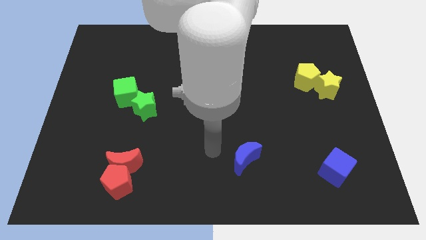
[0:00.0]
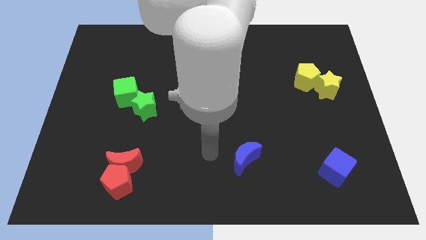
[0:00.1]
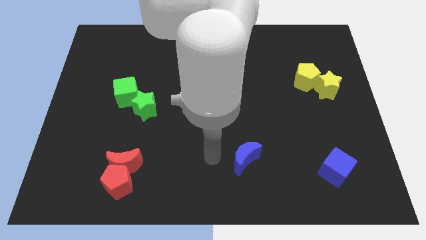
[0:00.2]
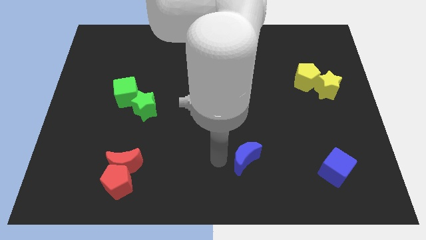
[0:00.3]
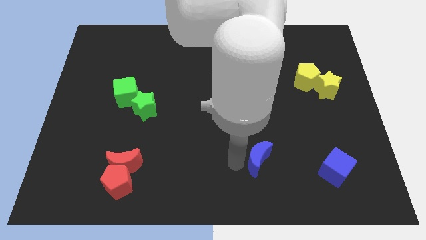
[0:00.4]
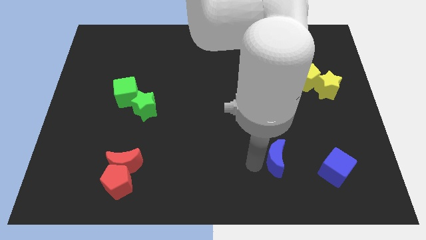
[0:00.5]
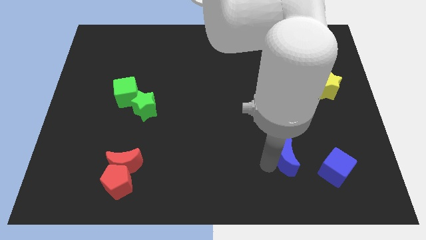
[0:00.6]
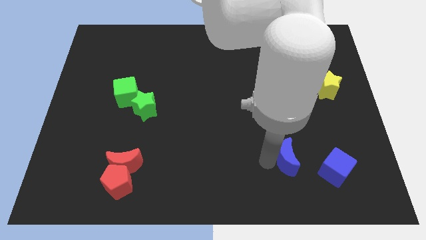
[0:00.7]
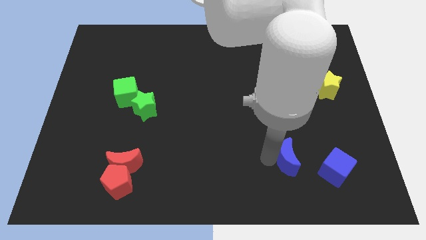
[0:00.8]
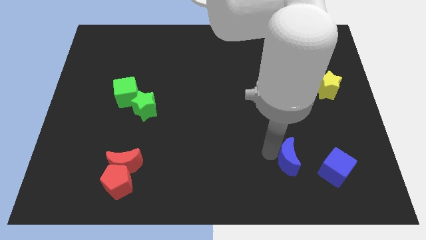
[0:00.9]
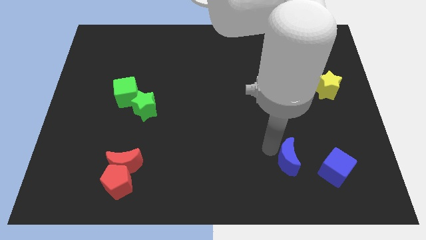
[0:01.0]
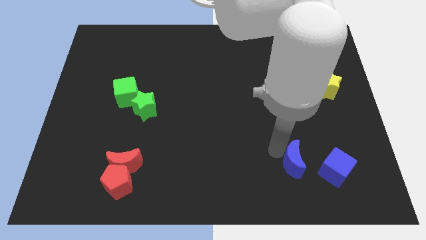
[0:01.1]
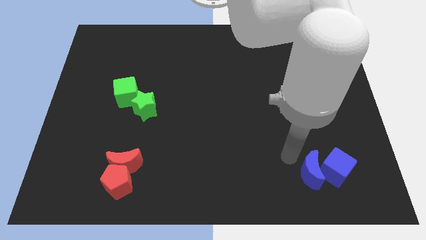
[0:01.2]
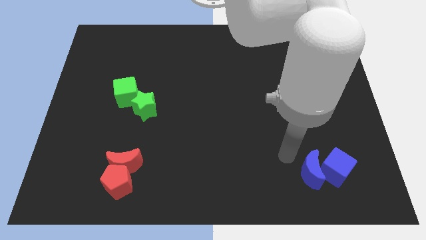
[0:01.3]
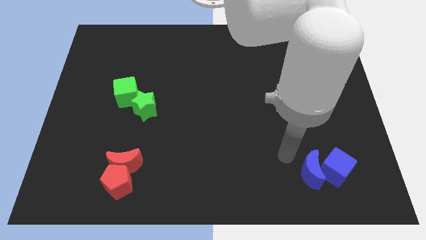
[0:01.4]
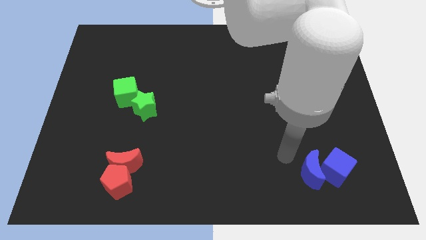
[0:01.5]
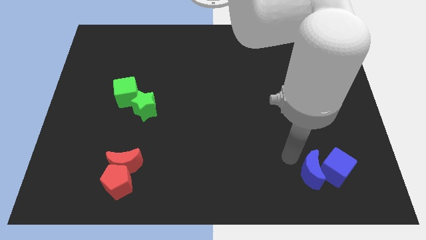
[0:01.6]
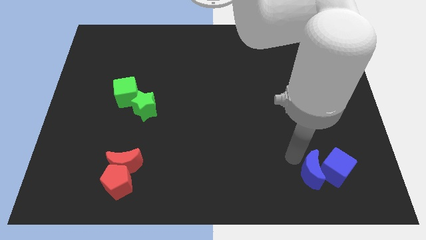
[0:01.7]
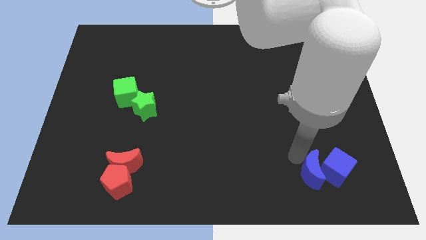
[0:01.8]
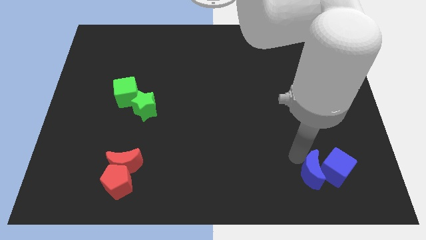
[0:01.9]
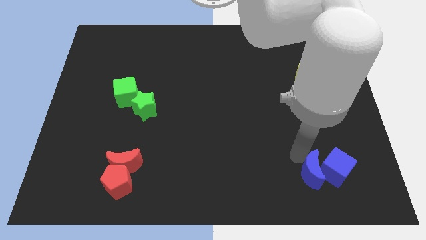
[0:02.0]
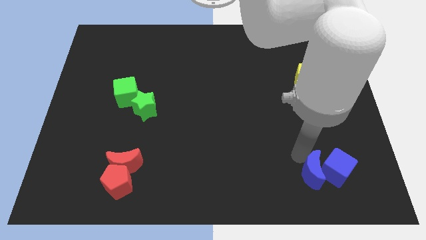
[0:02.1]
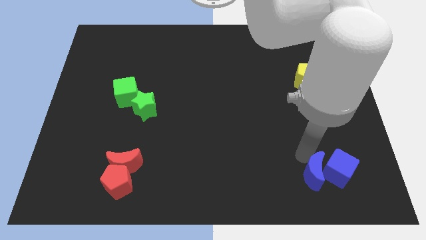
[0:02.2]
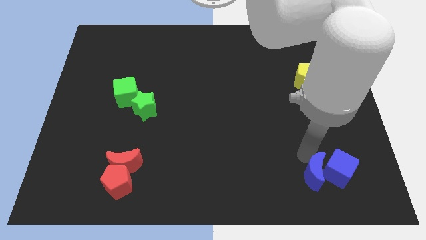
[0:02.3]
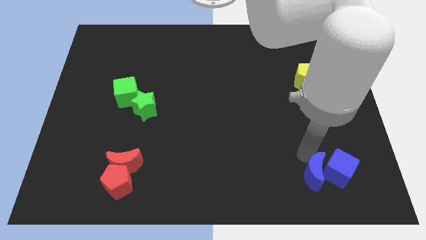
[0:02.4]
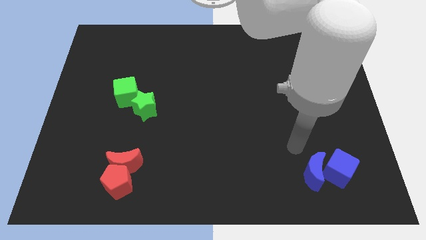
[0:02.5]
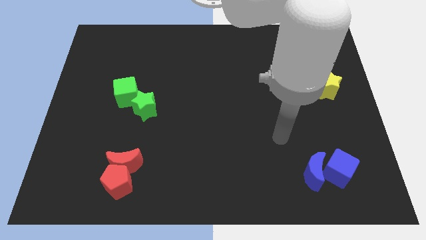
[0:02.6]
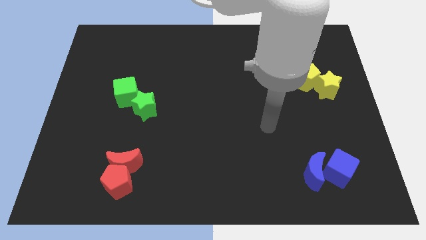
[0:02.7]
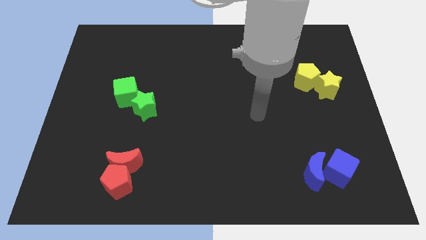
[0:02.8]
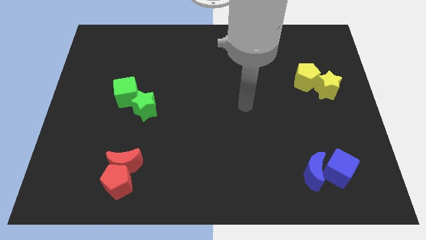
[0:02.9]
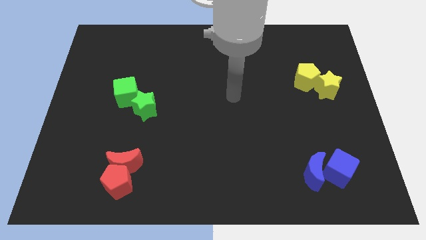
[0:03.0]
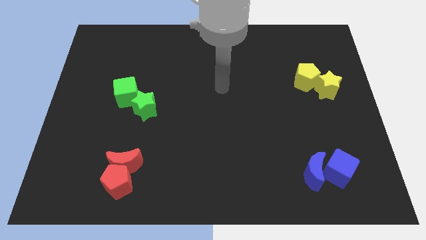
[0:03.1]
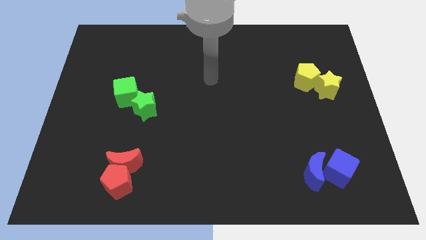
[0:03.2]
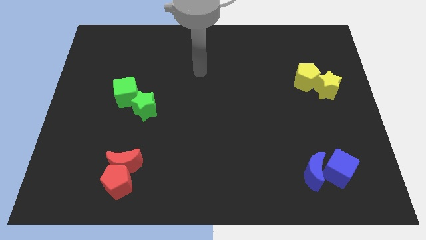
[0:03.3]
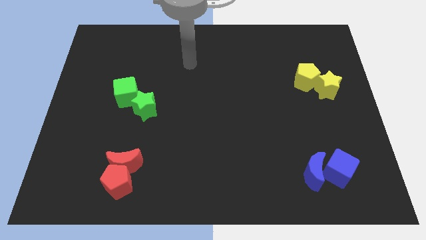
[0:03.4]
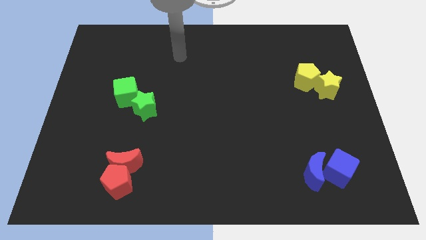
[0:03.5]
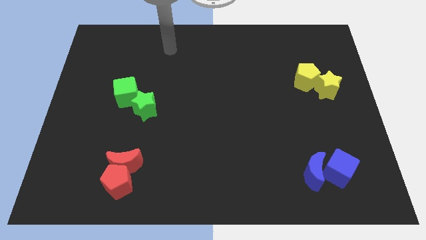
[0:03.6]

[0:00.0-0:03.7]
push the blue blocks together at the bottom side of the yellow blocks

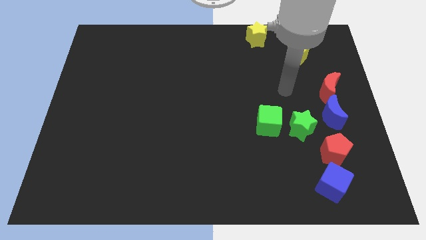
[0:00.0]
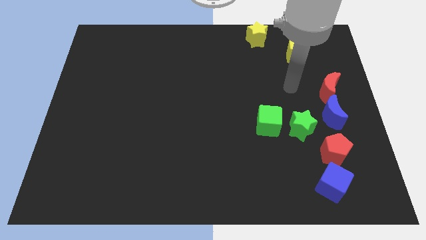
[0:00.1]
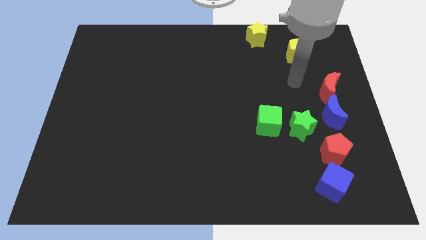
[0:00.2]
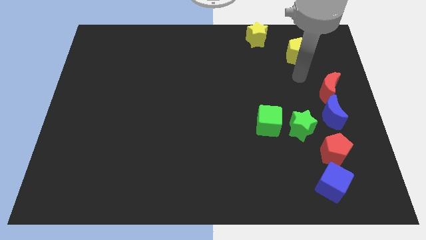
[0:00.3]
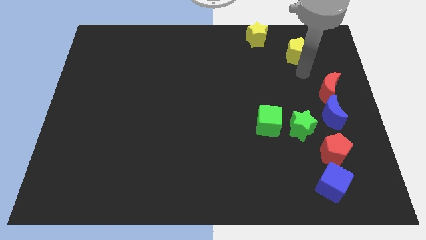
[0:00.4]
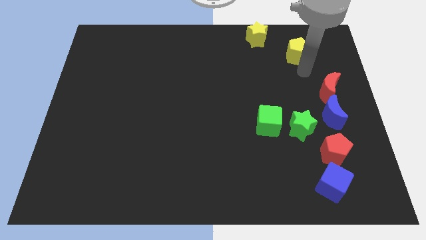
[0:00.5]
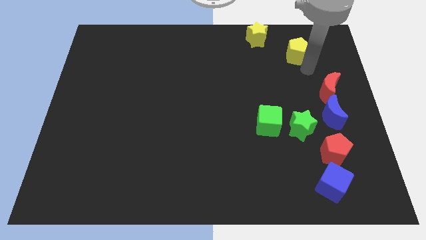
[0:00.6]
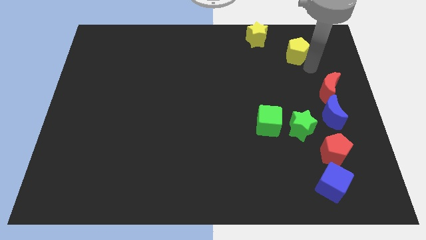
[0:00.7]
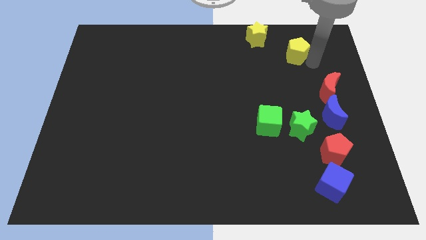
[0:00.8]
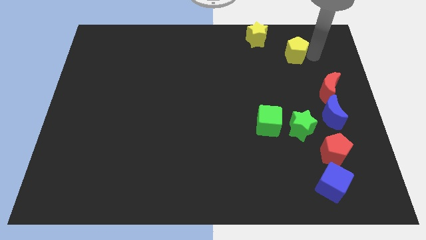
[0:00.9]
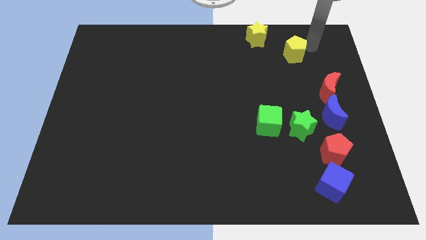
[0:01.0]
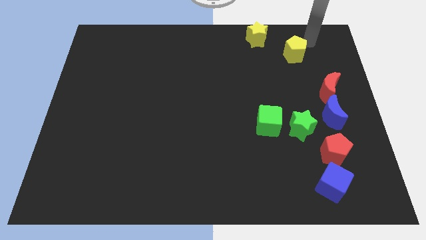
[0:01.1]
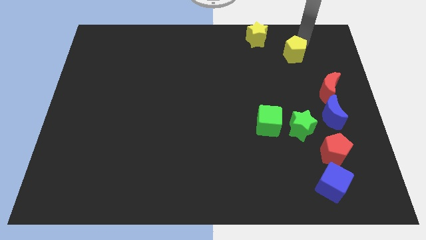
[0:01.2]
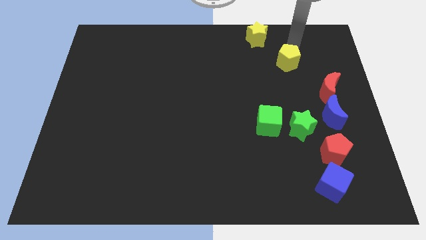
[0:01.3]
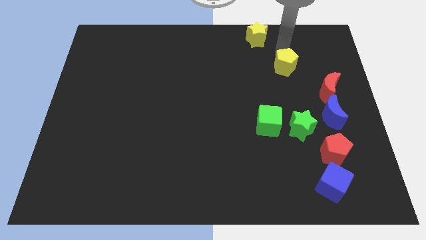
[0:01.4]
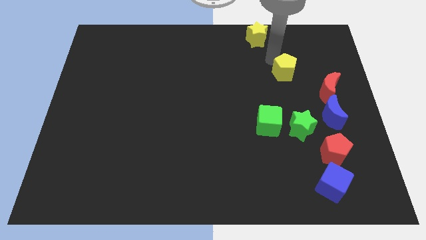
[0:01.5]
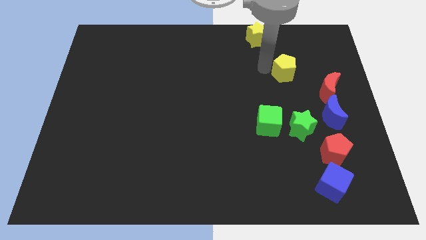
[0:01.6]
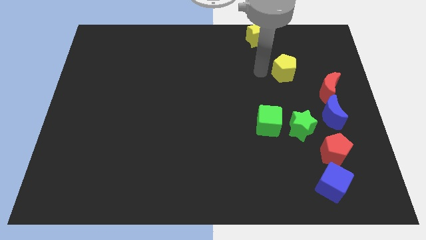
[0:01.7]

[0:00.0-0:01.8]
move the yellow pentagon slightly to the down

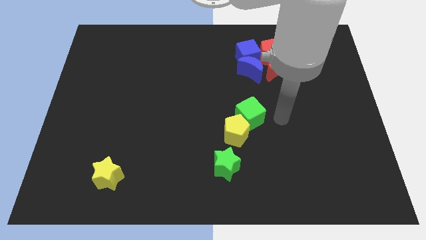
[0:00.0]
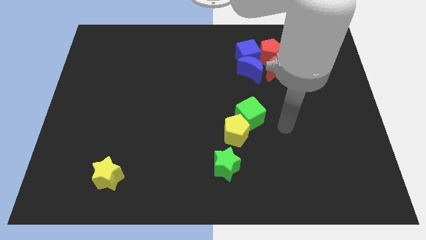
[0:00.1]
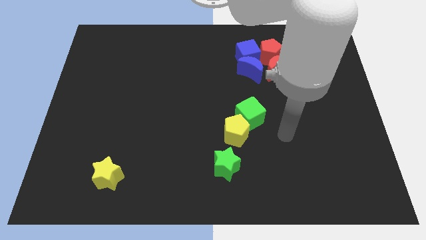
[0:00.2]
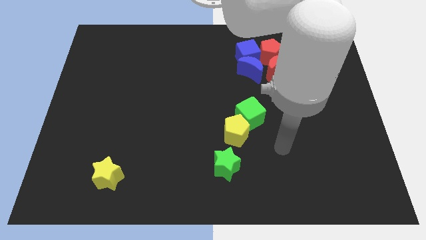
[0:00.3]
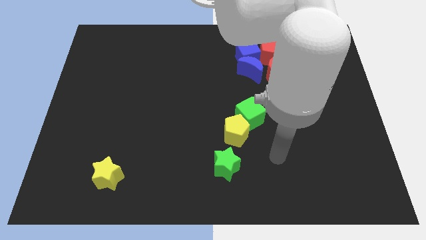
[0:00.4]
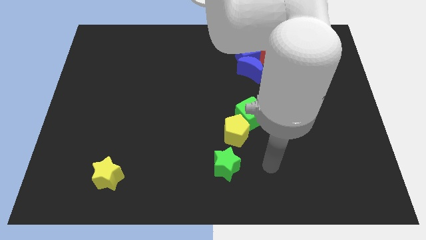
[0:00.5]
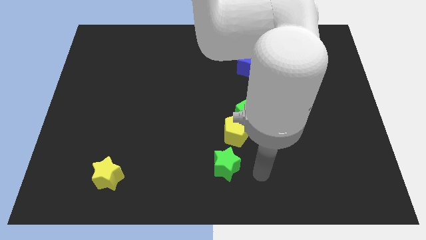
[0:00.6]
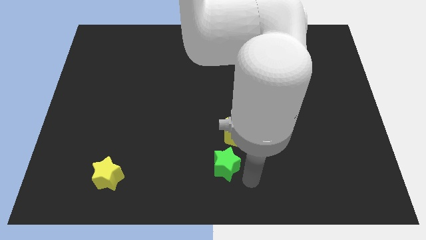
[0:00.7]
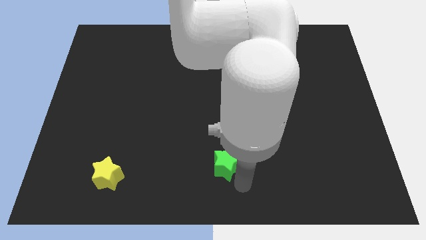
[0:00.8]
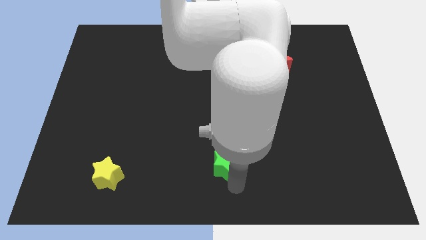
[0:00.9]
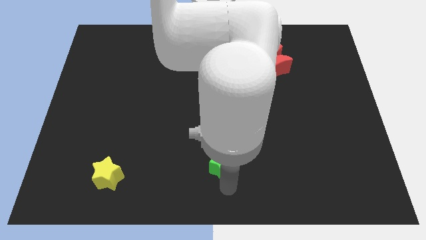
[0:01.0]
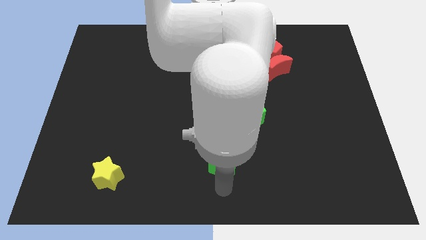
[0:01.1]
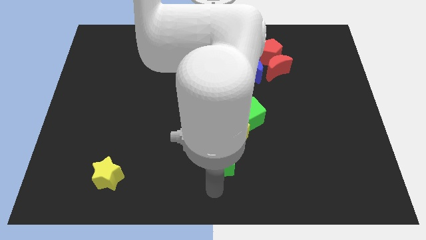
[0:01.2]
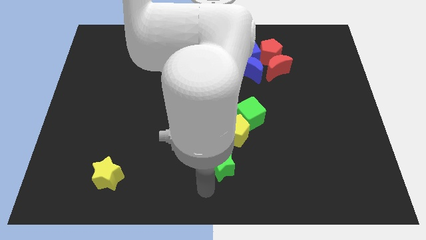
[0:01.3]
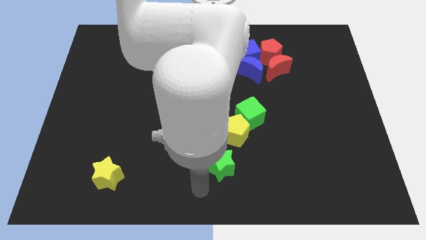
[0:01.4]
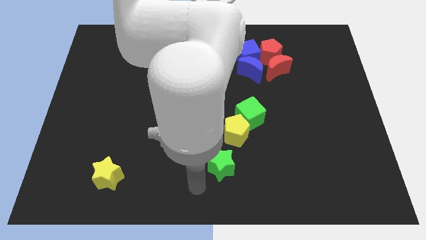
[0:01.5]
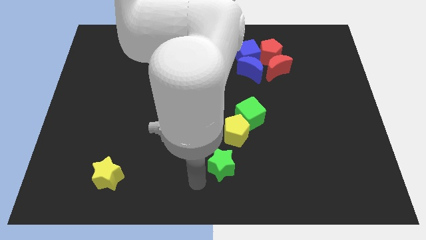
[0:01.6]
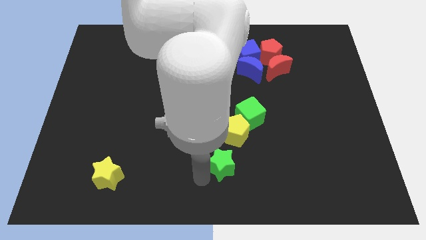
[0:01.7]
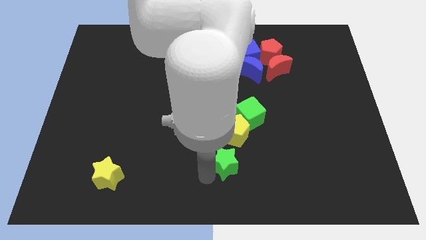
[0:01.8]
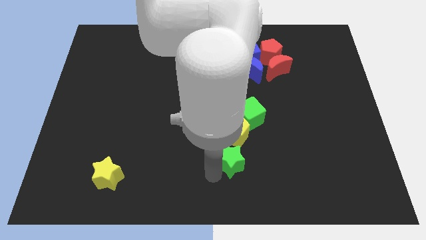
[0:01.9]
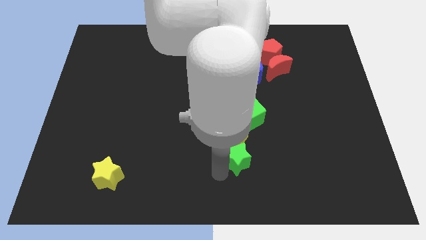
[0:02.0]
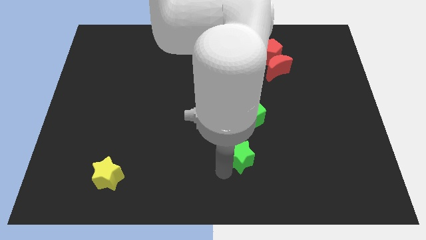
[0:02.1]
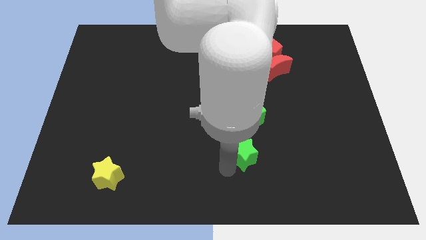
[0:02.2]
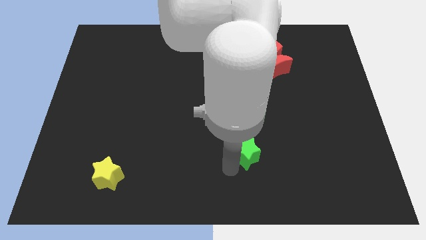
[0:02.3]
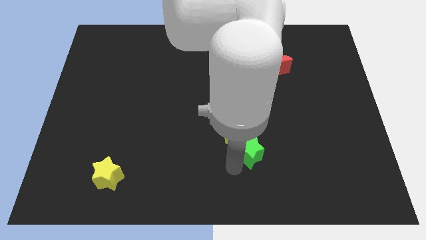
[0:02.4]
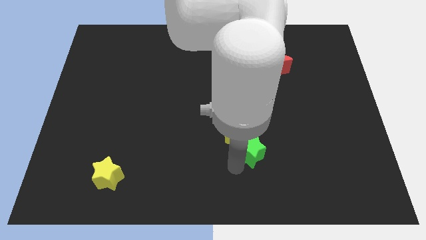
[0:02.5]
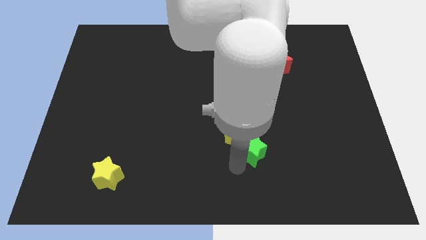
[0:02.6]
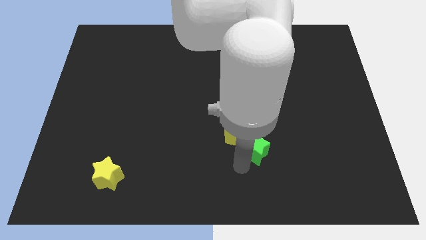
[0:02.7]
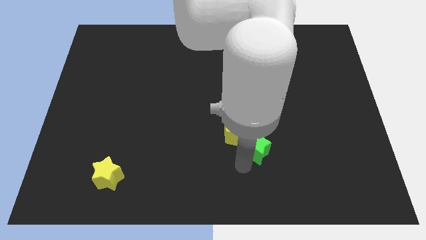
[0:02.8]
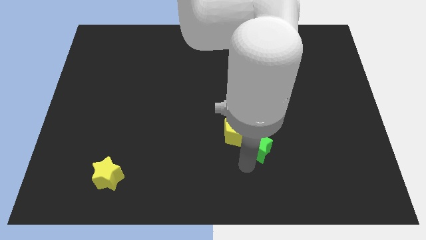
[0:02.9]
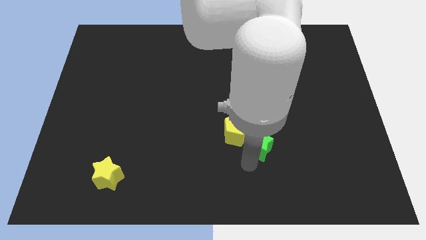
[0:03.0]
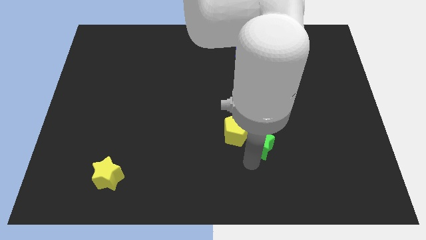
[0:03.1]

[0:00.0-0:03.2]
slide the green star diagonally to the yellow pentagon

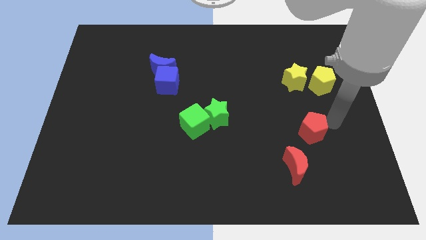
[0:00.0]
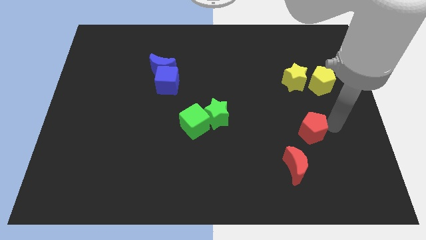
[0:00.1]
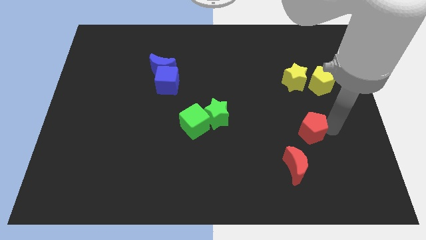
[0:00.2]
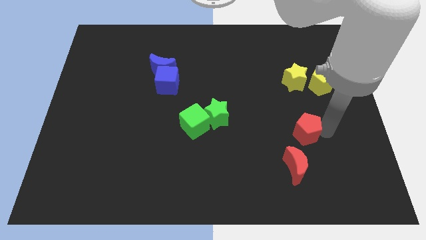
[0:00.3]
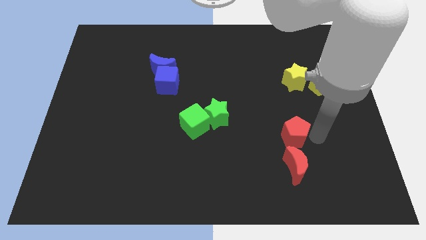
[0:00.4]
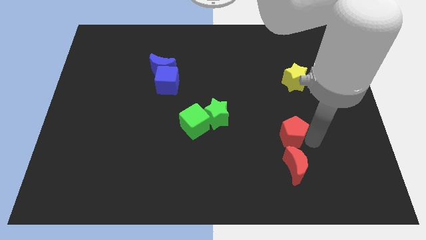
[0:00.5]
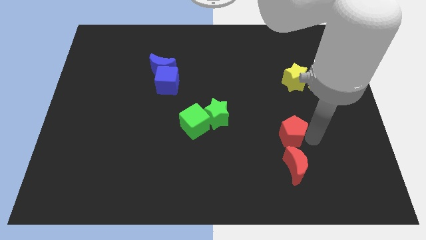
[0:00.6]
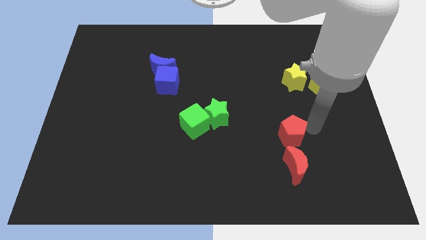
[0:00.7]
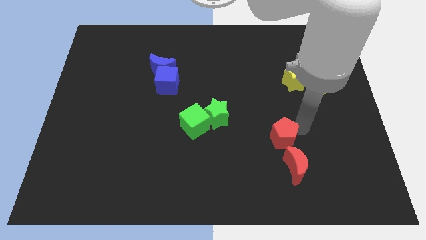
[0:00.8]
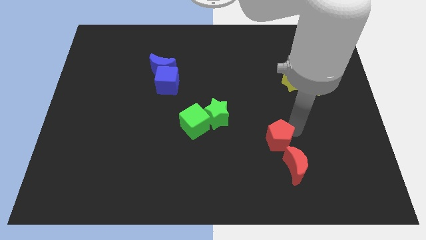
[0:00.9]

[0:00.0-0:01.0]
push the red pentagon to the left
